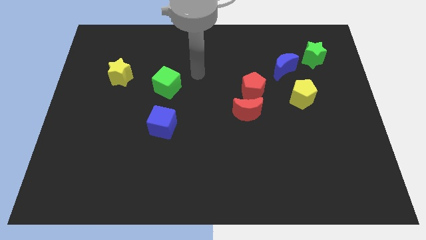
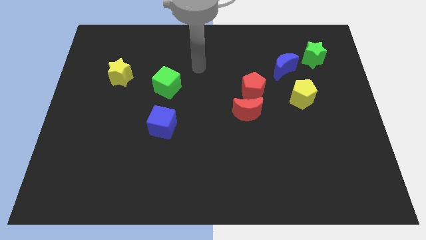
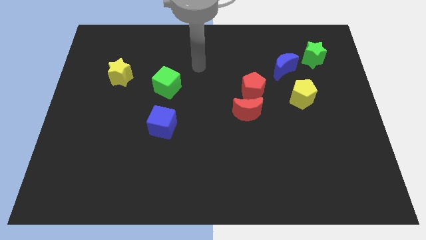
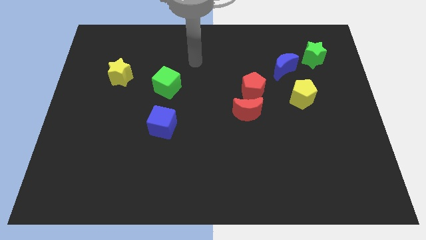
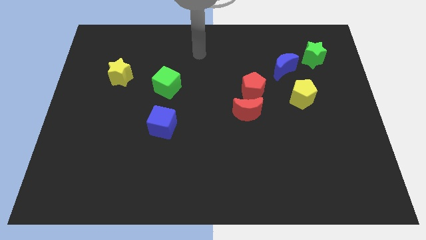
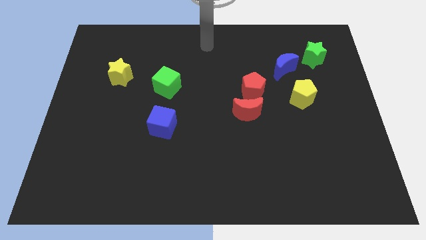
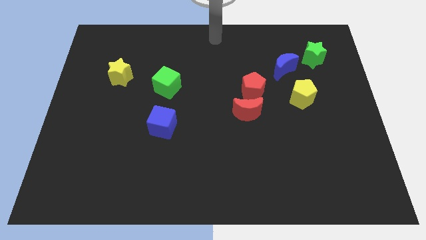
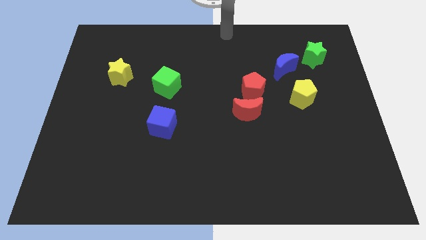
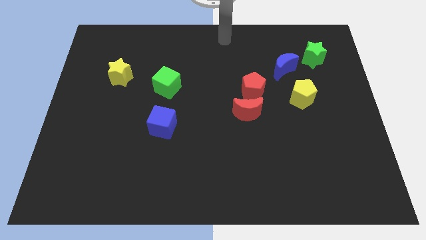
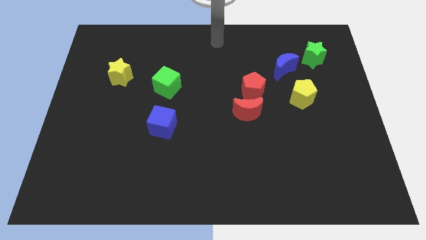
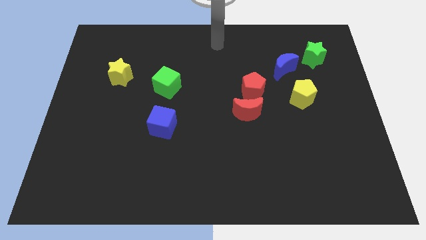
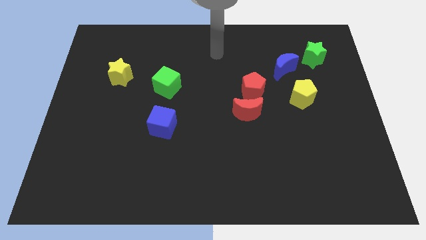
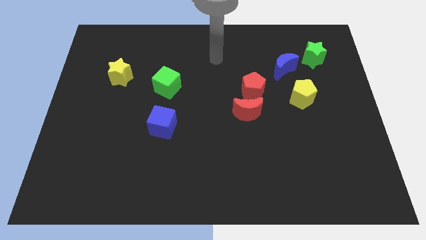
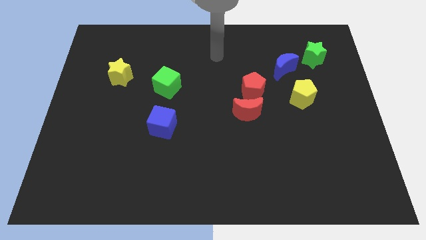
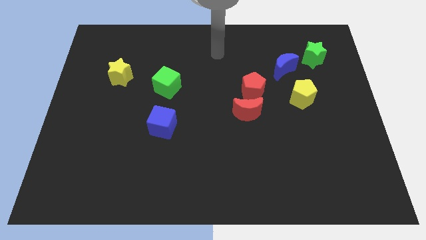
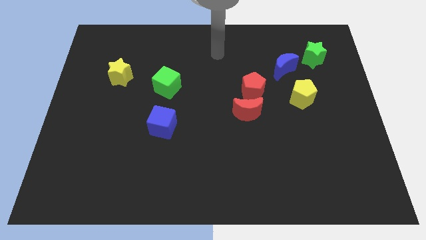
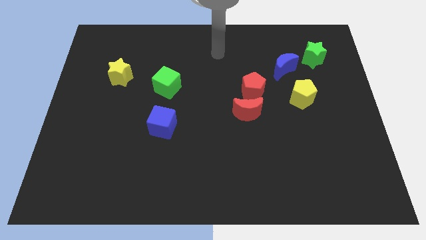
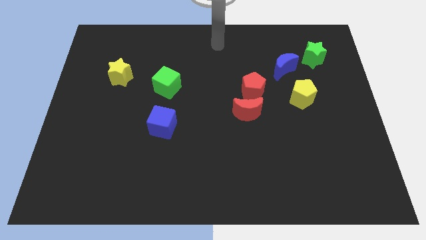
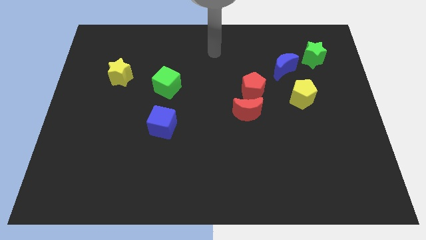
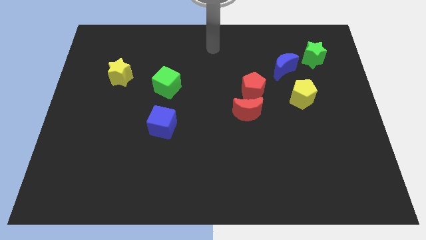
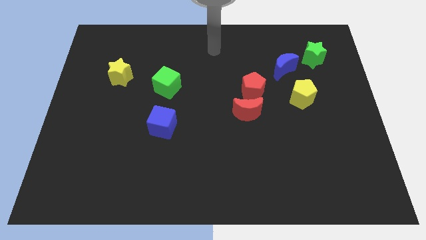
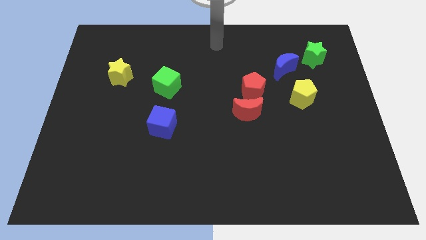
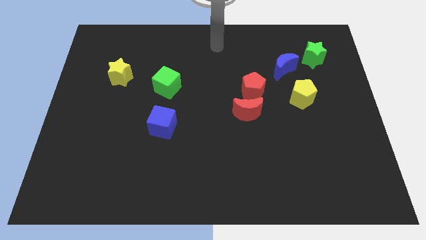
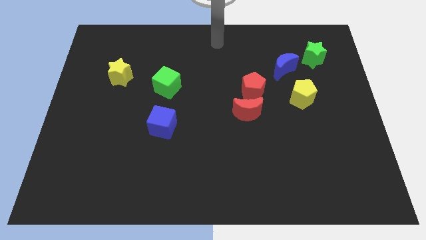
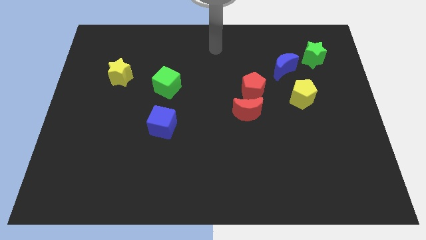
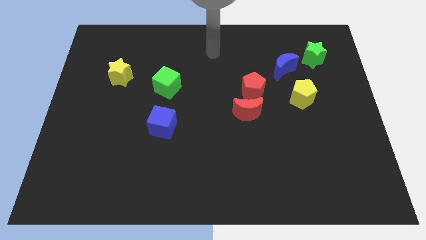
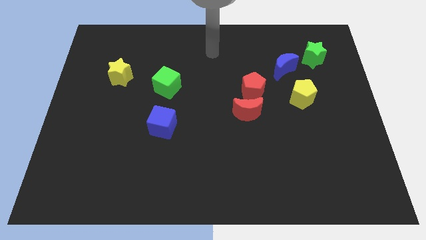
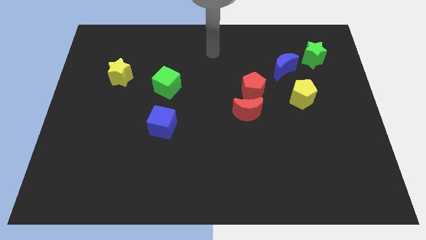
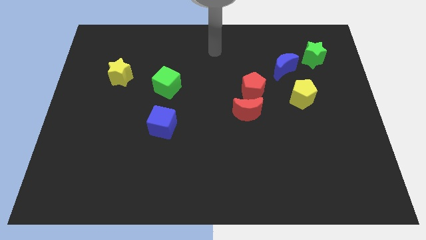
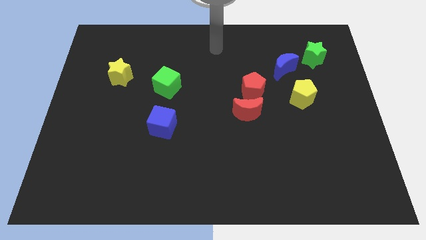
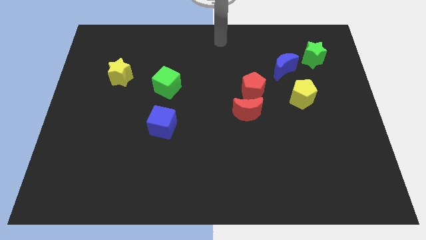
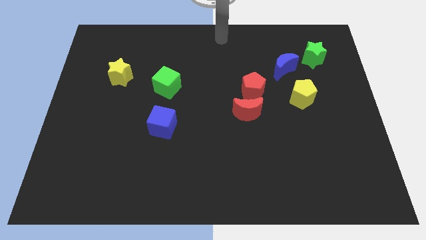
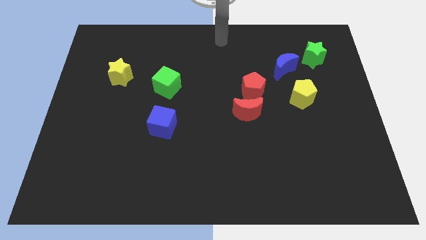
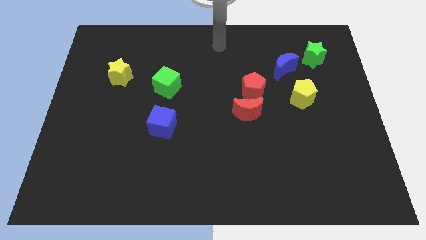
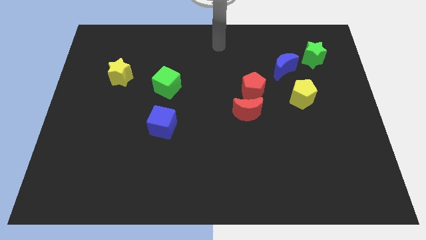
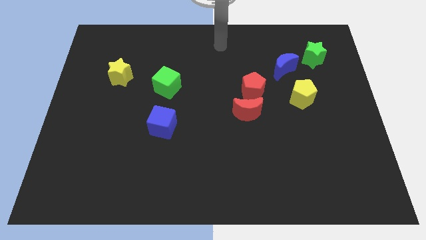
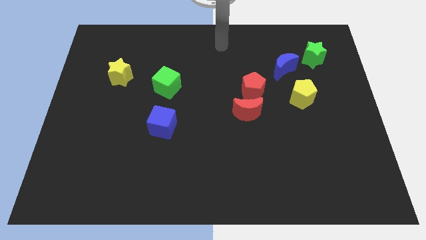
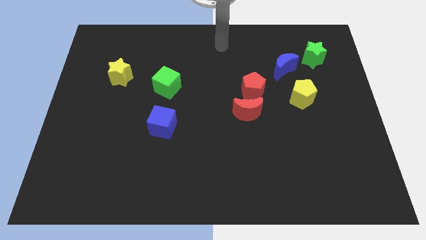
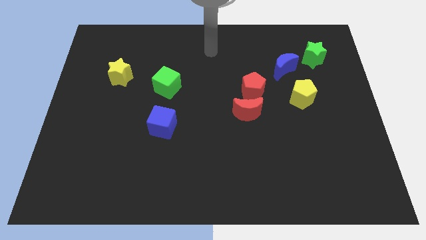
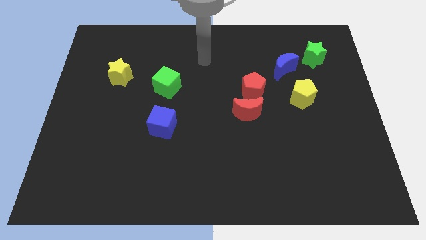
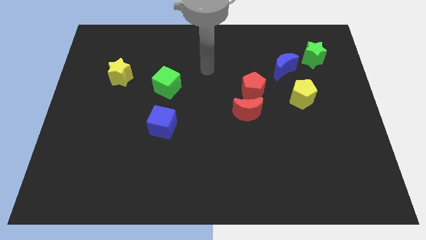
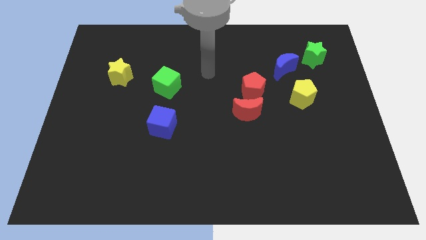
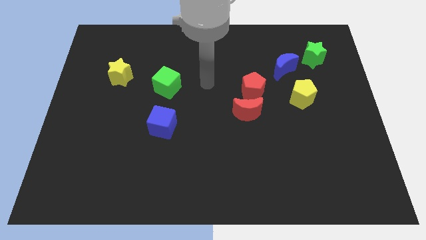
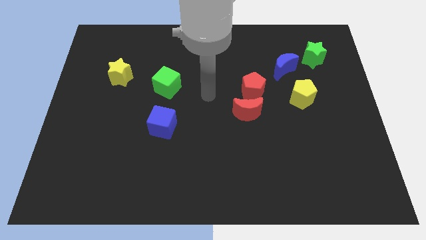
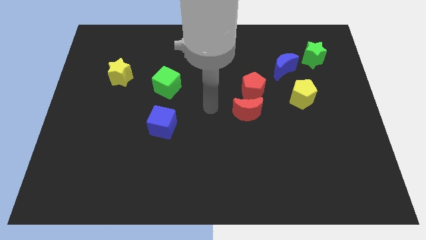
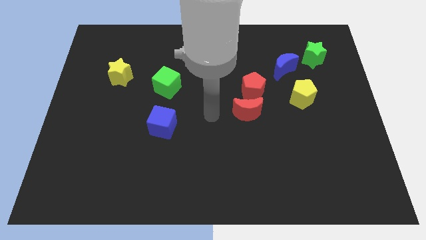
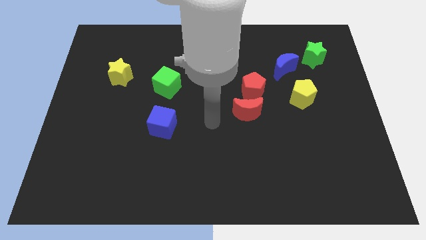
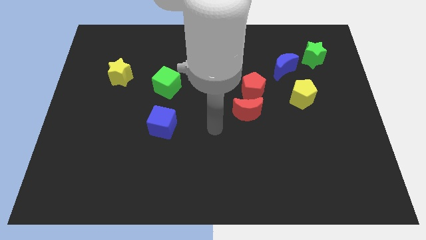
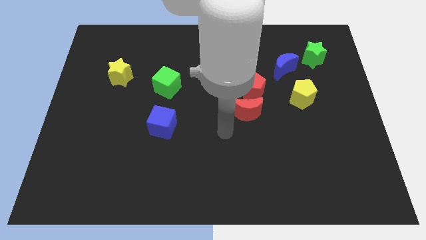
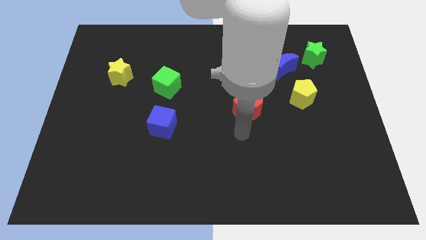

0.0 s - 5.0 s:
place your arm below the red crescent

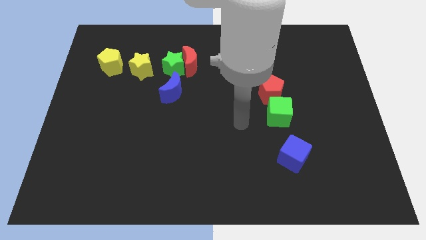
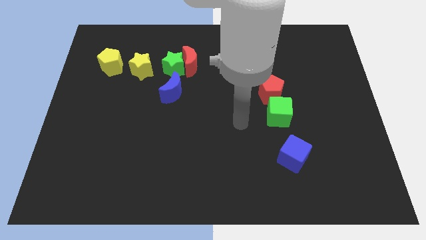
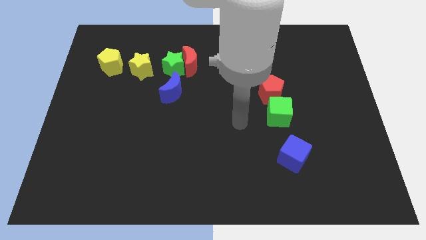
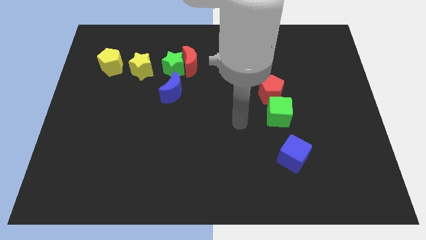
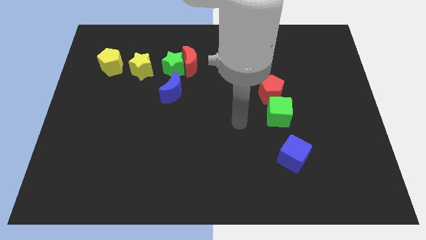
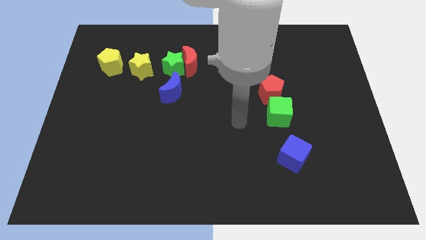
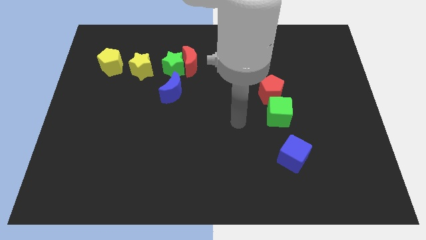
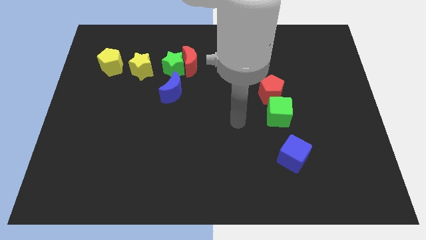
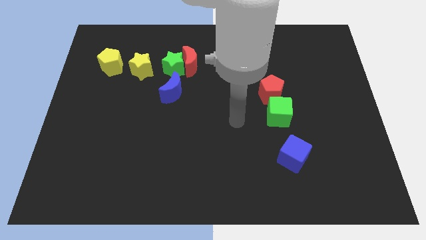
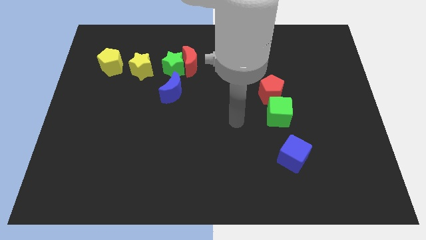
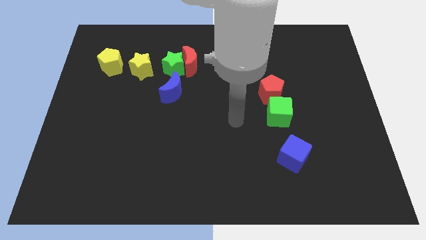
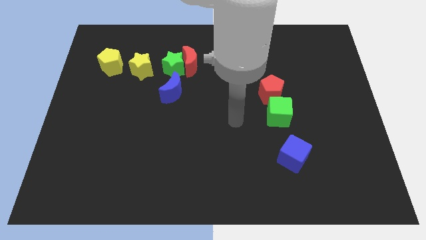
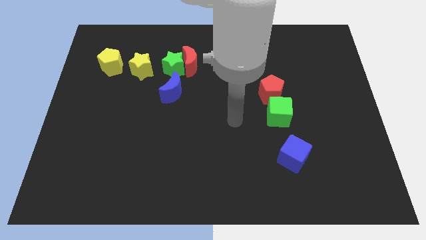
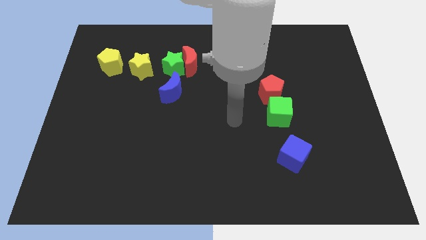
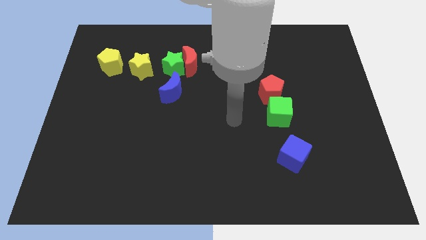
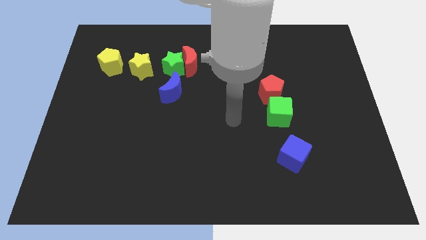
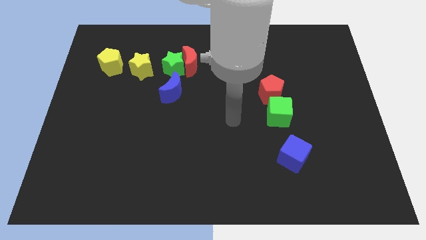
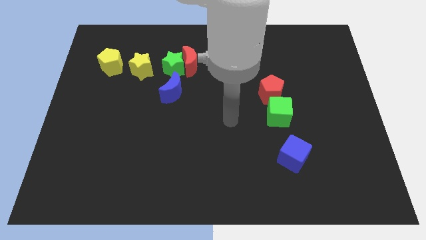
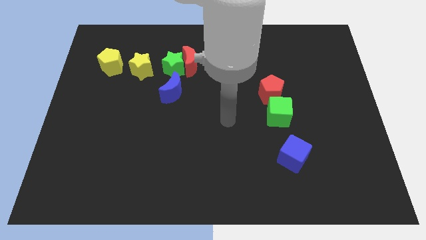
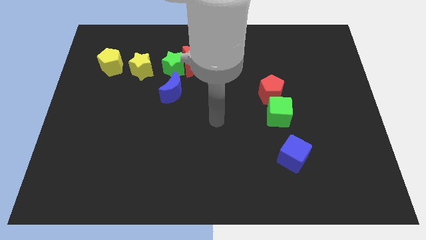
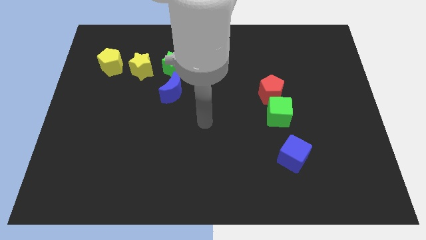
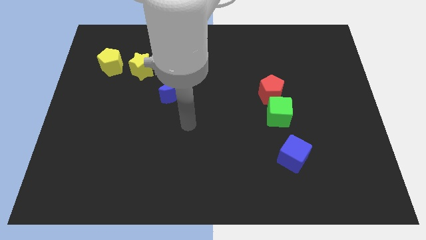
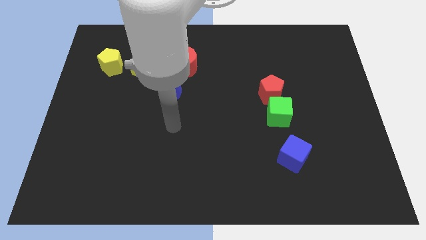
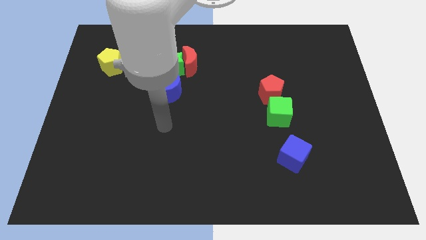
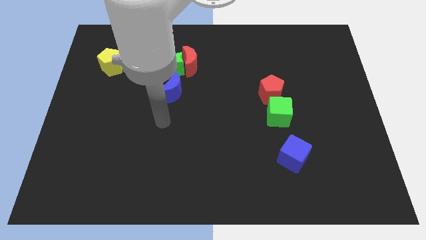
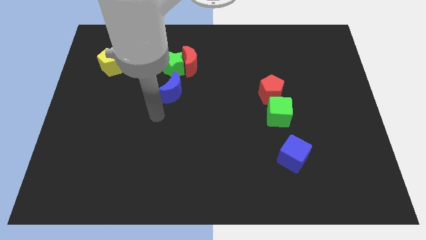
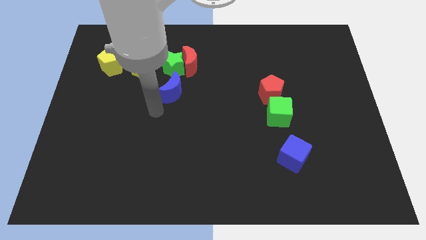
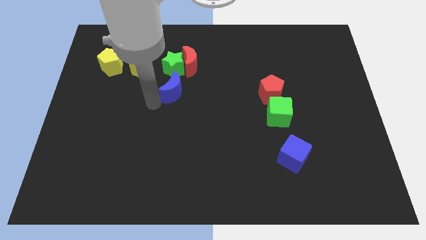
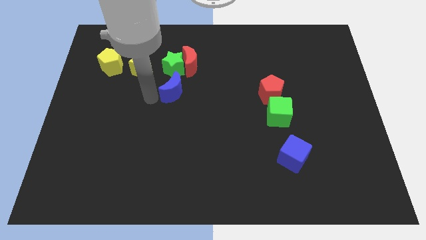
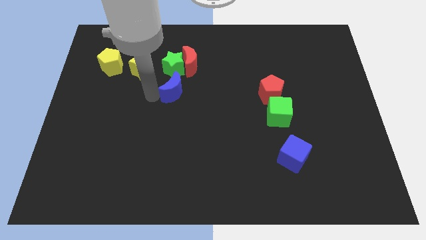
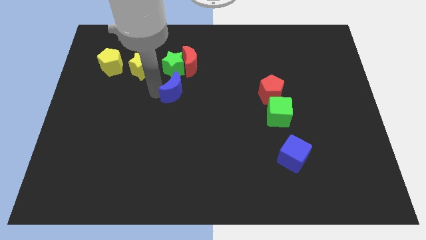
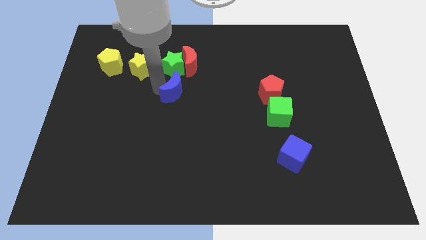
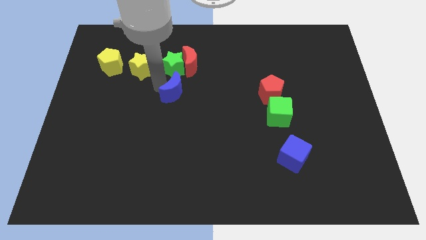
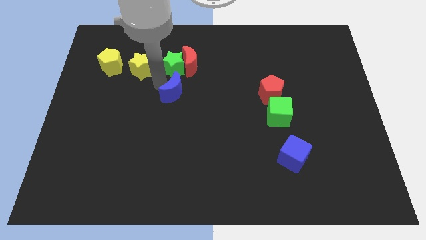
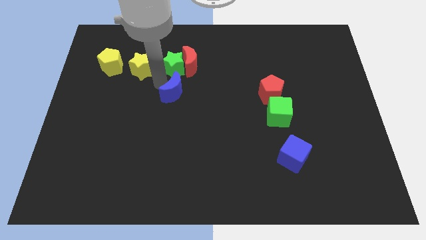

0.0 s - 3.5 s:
place the arm close to the blue crescent

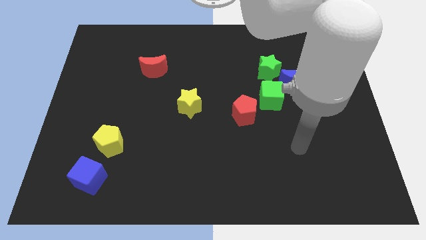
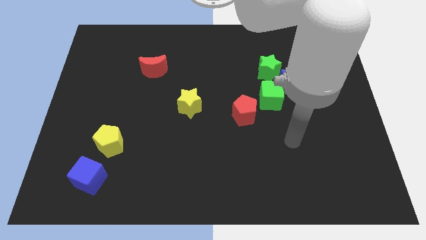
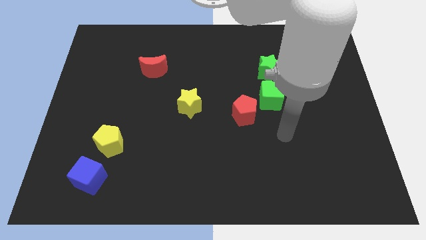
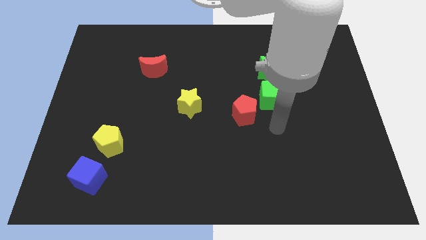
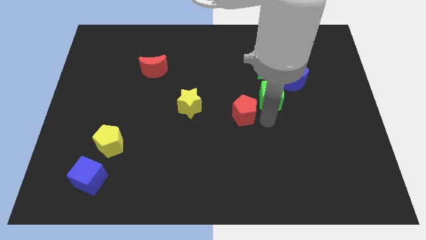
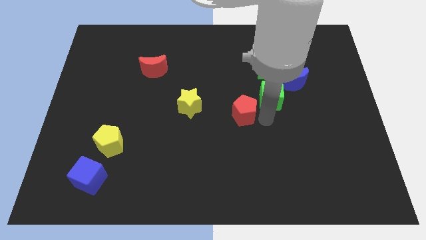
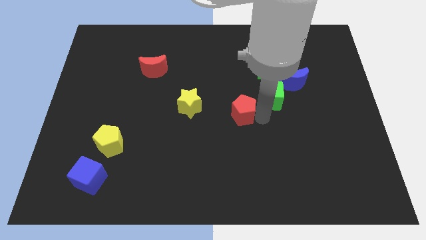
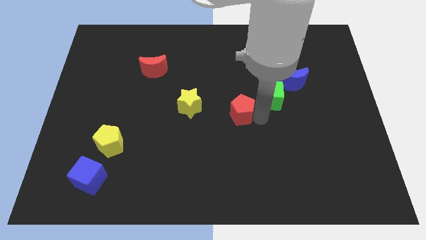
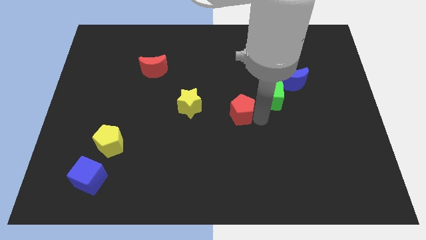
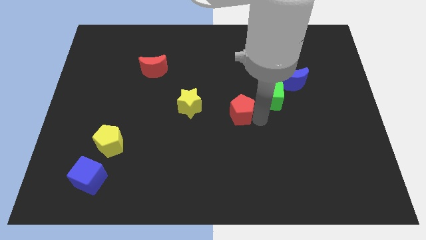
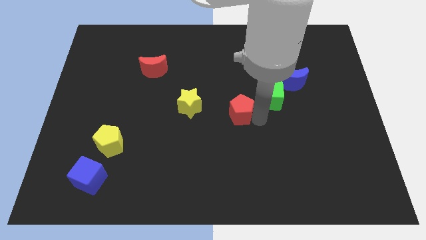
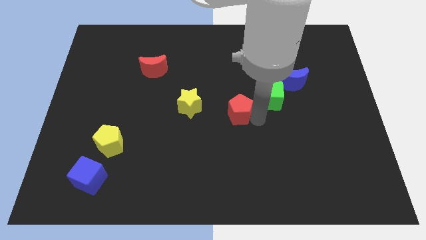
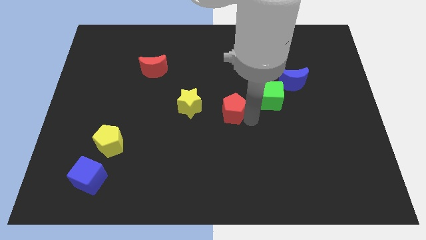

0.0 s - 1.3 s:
move the red pentagon slightly to the left
